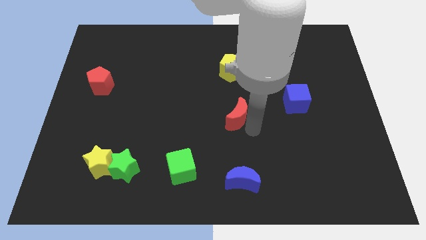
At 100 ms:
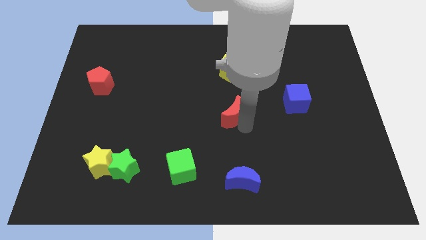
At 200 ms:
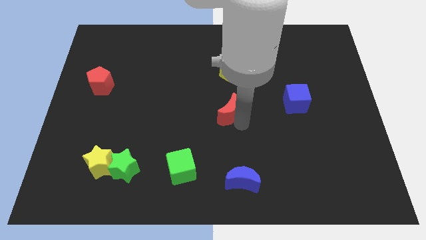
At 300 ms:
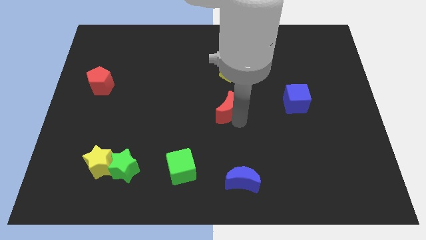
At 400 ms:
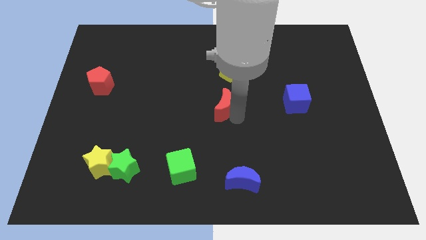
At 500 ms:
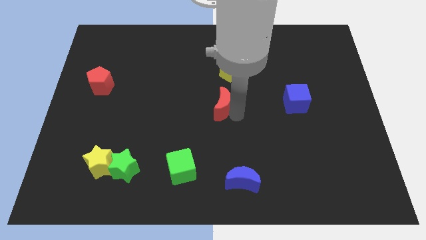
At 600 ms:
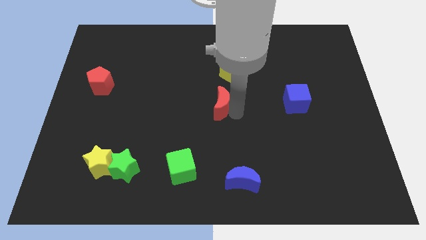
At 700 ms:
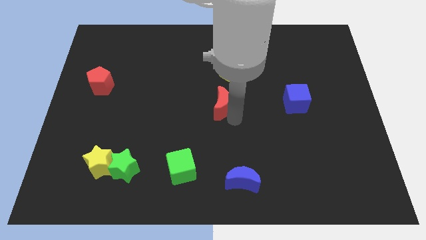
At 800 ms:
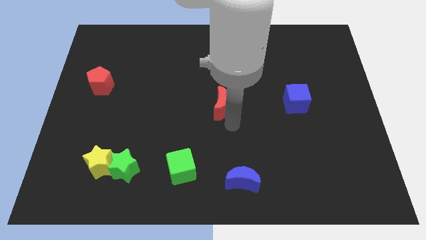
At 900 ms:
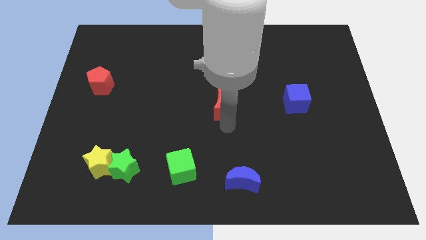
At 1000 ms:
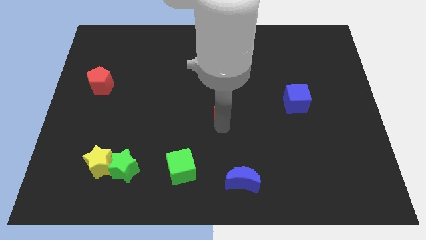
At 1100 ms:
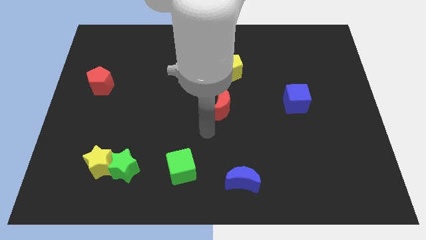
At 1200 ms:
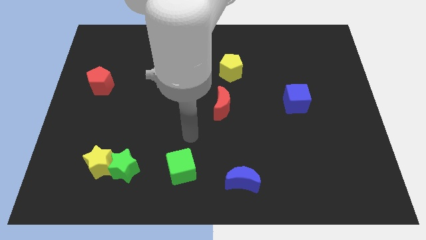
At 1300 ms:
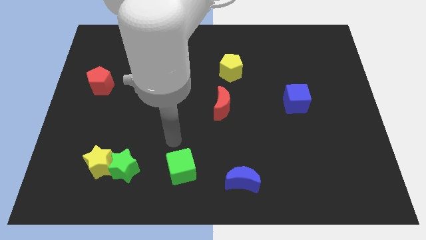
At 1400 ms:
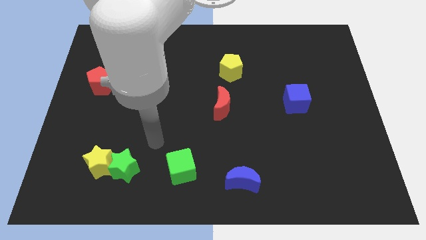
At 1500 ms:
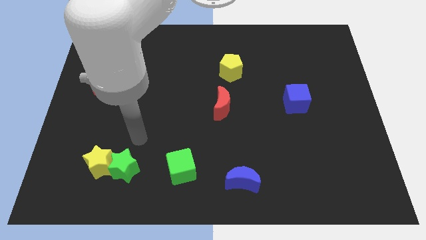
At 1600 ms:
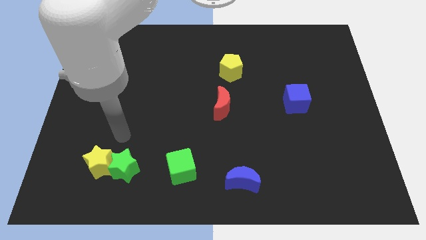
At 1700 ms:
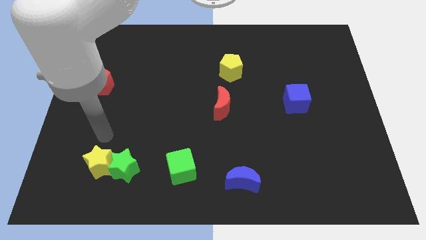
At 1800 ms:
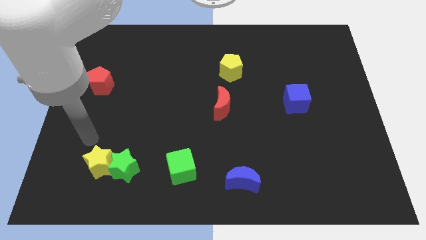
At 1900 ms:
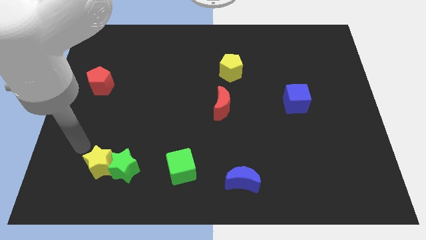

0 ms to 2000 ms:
move red moon slightly up

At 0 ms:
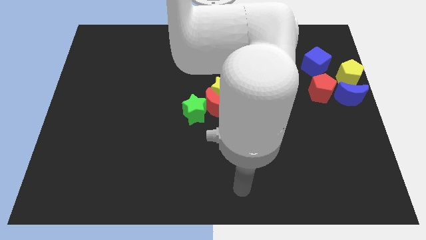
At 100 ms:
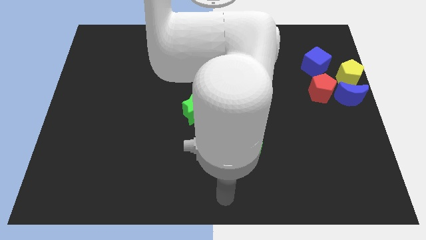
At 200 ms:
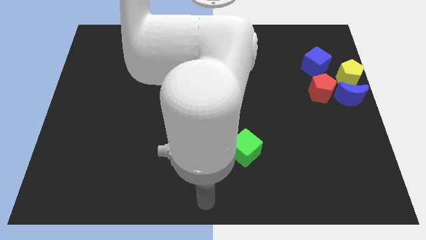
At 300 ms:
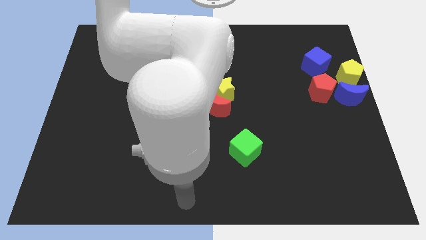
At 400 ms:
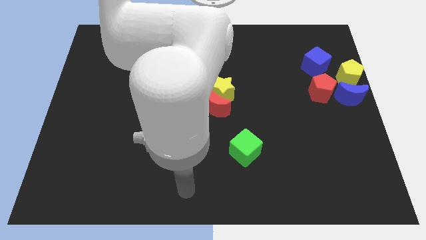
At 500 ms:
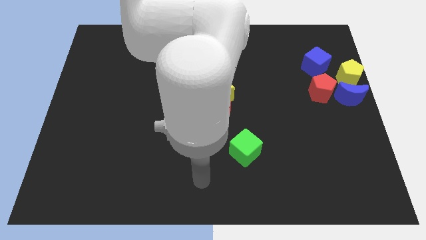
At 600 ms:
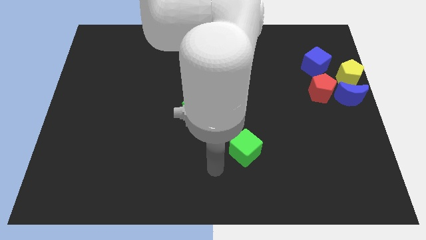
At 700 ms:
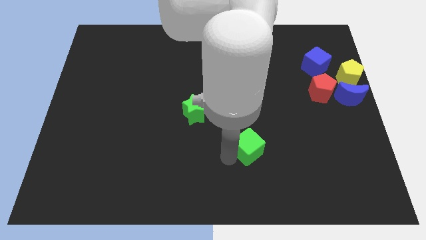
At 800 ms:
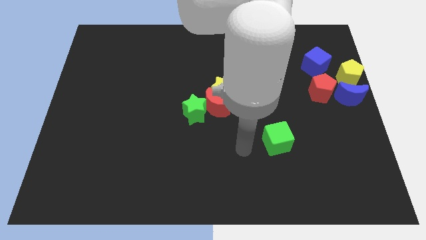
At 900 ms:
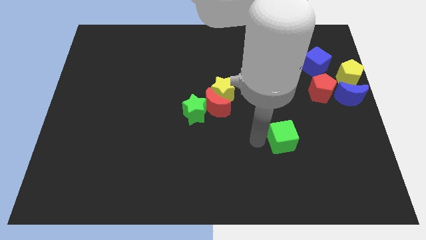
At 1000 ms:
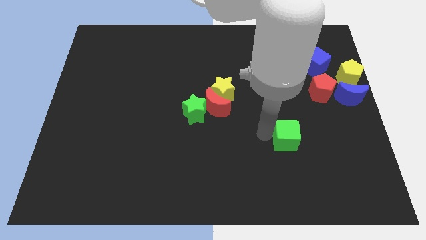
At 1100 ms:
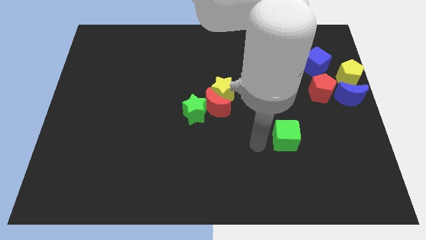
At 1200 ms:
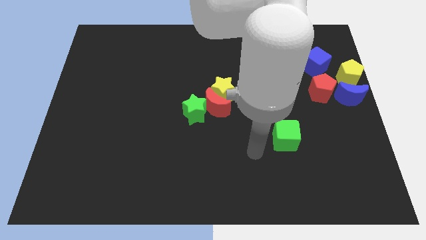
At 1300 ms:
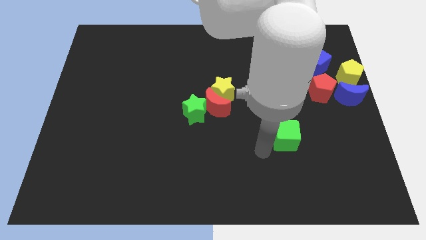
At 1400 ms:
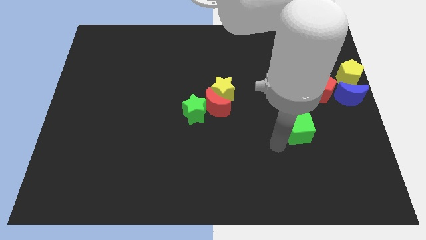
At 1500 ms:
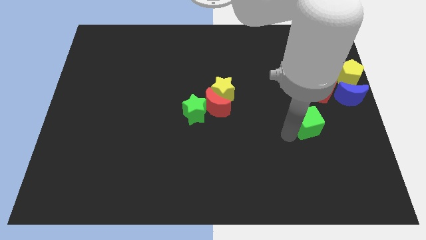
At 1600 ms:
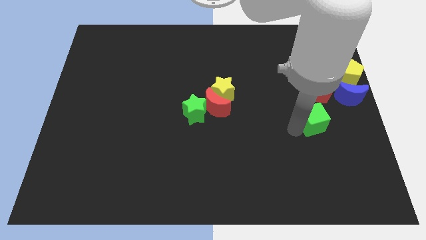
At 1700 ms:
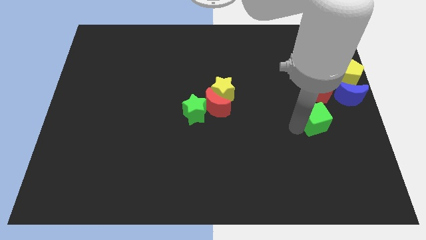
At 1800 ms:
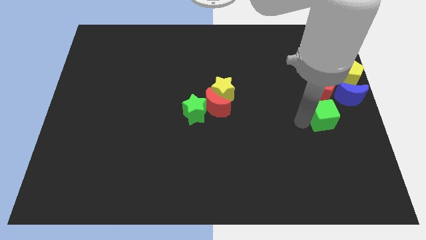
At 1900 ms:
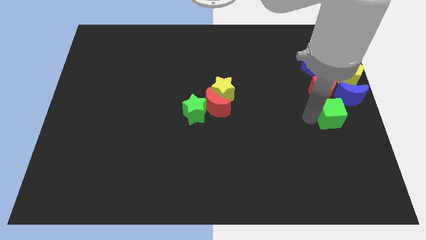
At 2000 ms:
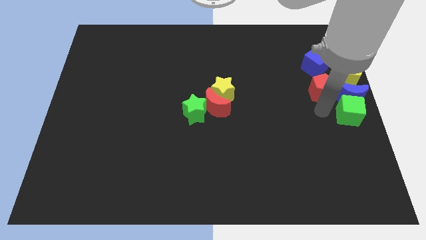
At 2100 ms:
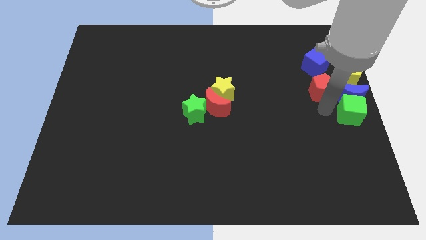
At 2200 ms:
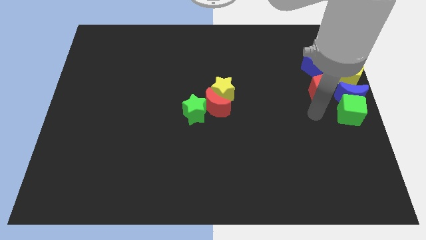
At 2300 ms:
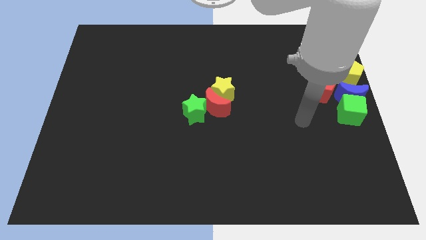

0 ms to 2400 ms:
put green cube below blue moon

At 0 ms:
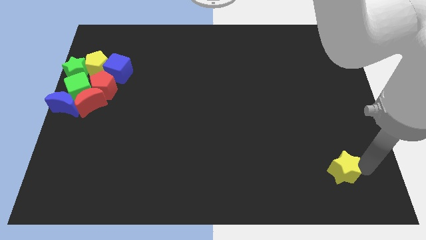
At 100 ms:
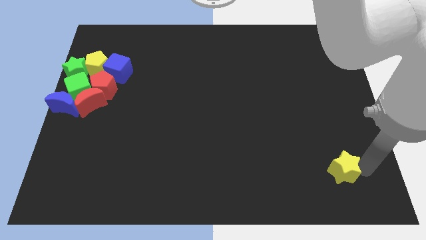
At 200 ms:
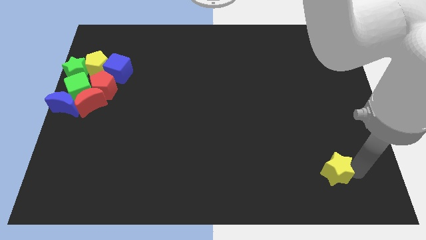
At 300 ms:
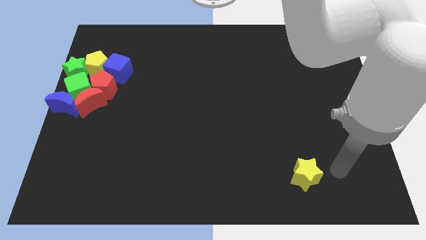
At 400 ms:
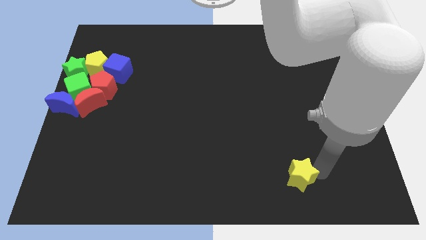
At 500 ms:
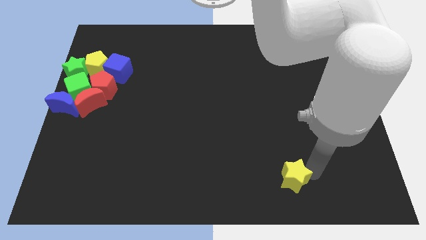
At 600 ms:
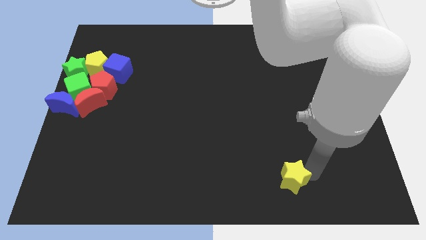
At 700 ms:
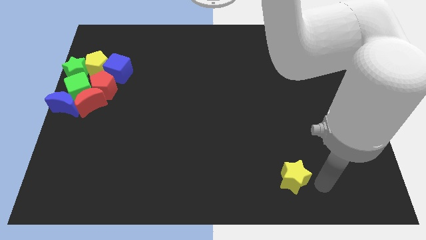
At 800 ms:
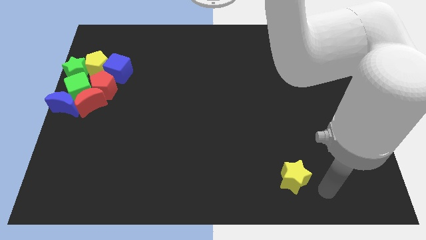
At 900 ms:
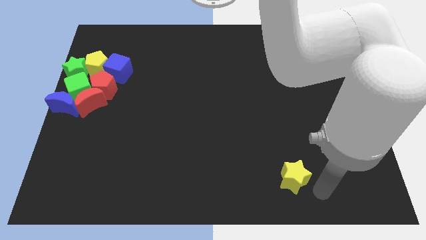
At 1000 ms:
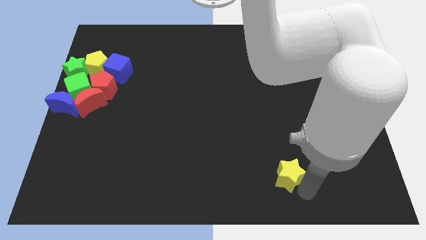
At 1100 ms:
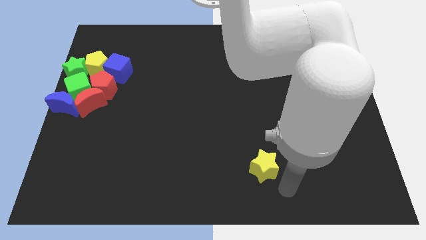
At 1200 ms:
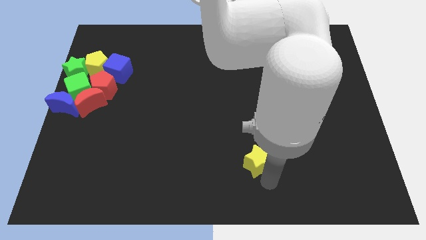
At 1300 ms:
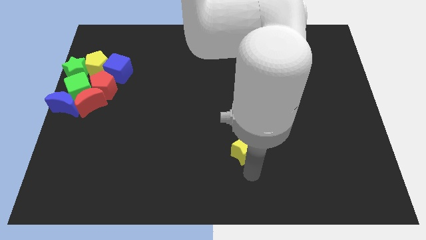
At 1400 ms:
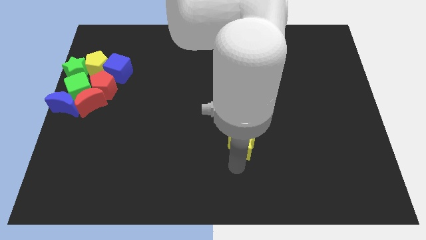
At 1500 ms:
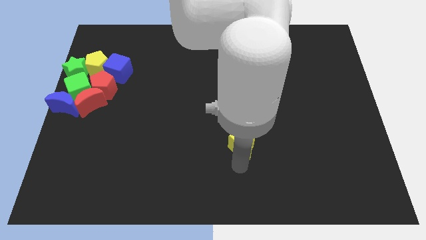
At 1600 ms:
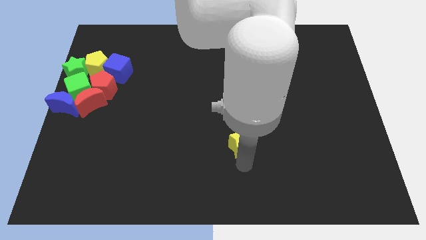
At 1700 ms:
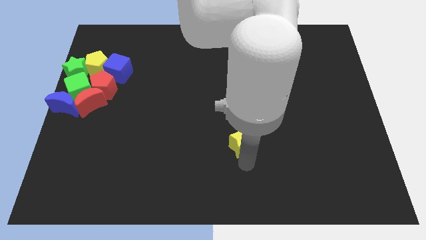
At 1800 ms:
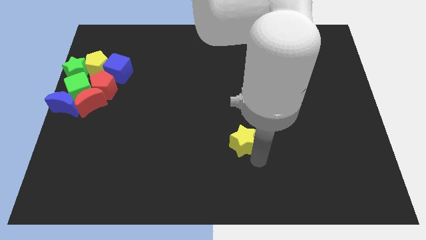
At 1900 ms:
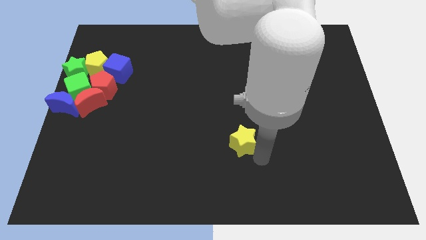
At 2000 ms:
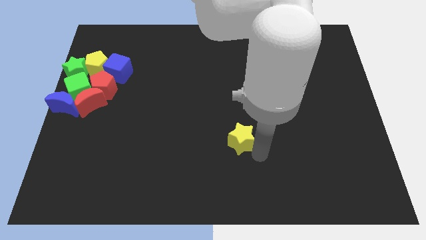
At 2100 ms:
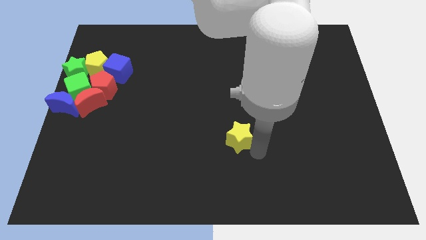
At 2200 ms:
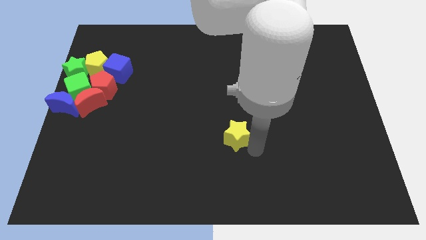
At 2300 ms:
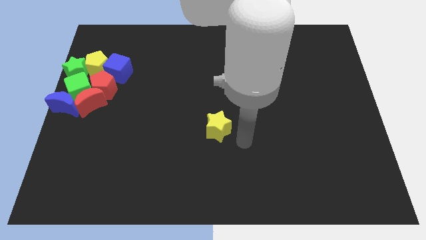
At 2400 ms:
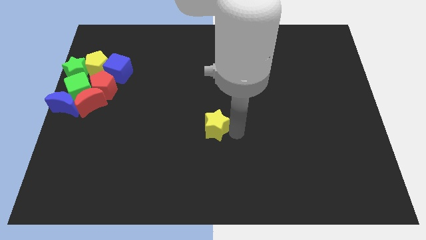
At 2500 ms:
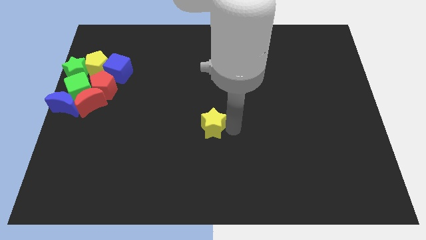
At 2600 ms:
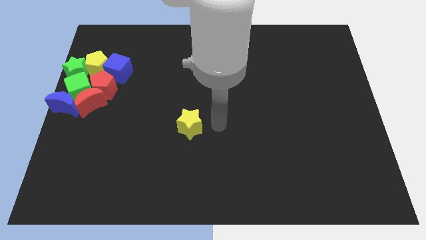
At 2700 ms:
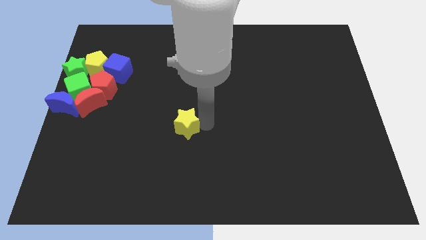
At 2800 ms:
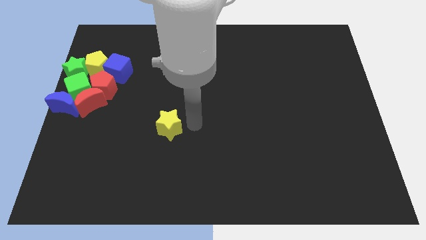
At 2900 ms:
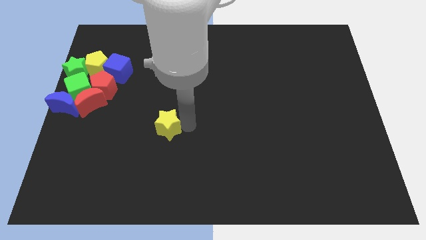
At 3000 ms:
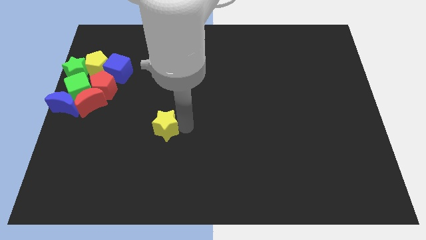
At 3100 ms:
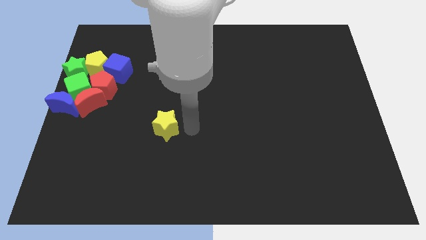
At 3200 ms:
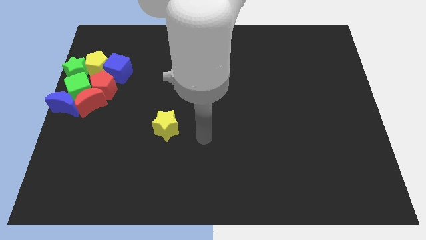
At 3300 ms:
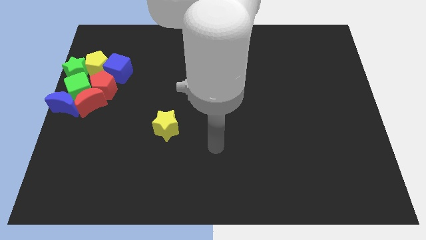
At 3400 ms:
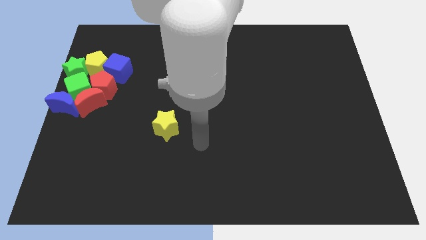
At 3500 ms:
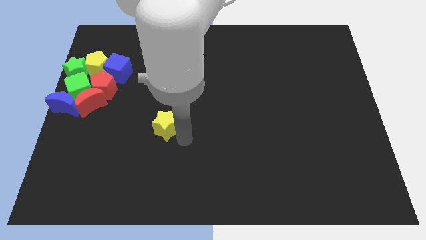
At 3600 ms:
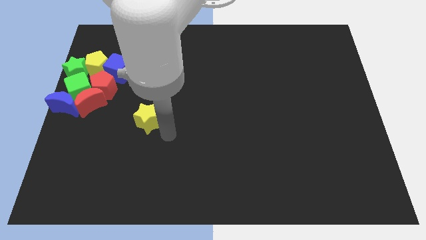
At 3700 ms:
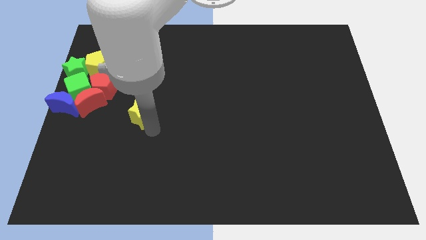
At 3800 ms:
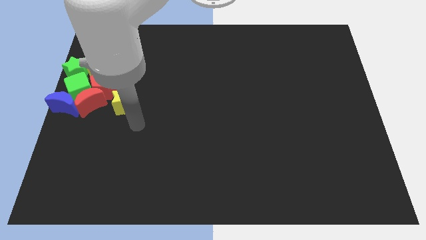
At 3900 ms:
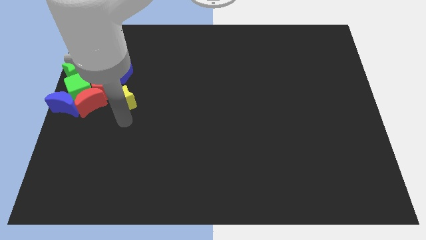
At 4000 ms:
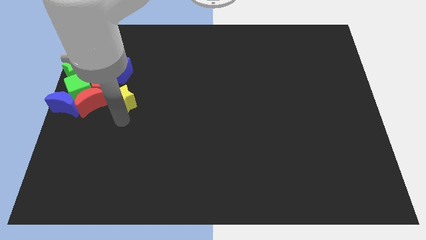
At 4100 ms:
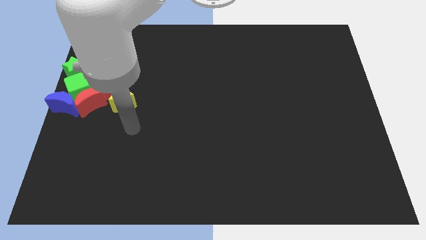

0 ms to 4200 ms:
place the yellow star on the bottom side of the red pentagon

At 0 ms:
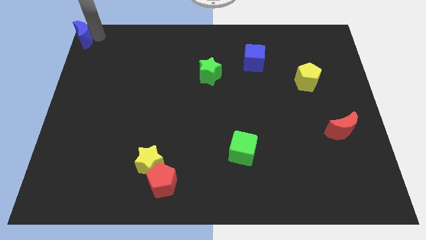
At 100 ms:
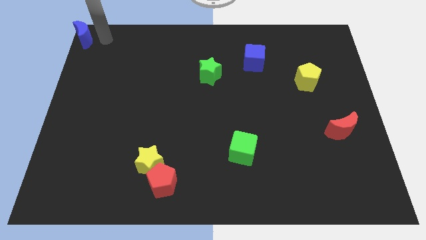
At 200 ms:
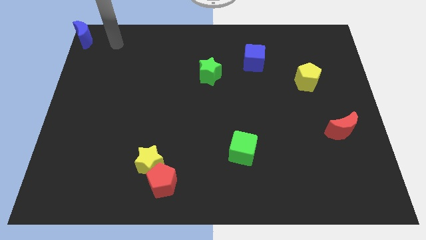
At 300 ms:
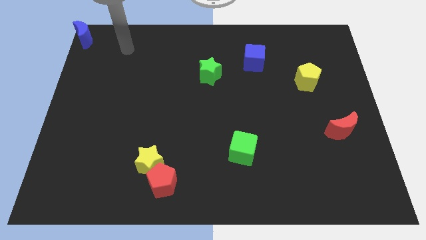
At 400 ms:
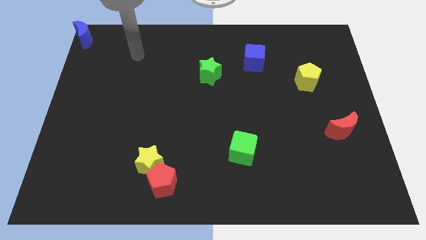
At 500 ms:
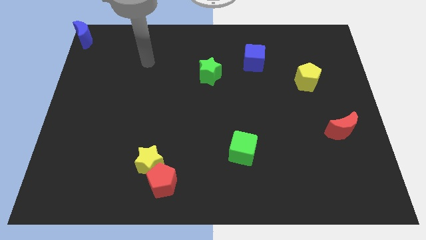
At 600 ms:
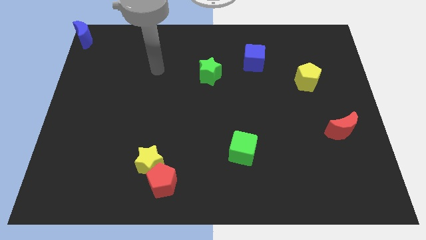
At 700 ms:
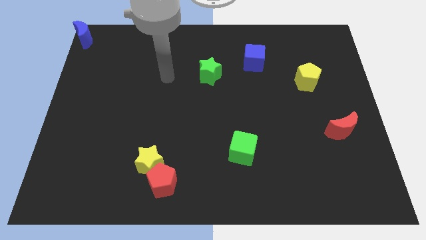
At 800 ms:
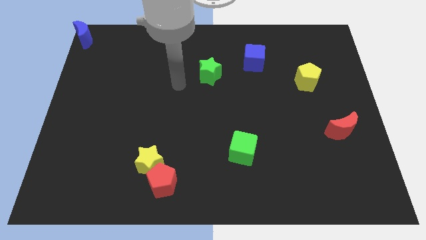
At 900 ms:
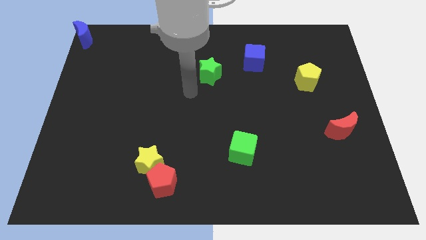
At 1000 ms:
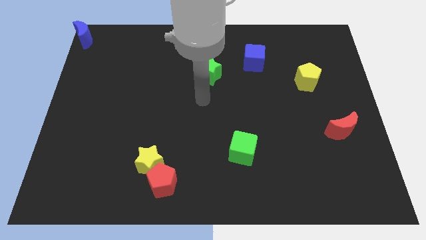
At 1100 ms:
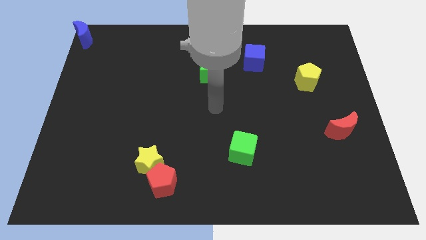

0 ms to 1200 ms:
point your arm at the center of the board
